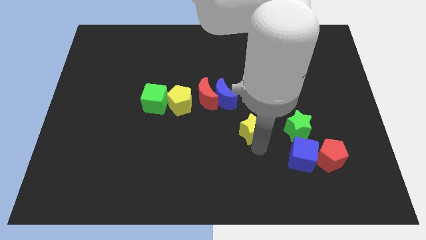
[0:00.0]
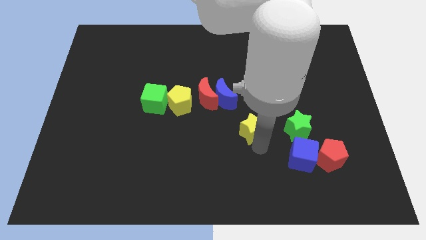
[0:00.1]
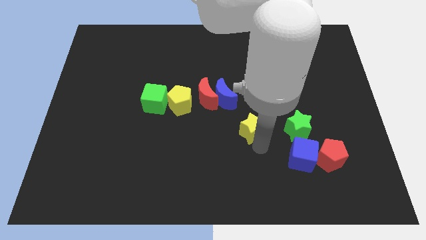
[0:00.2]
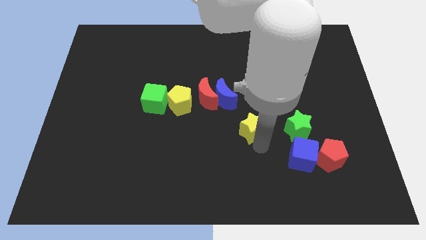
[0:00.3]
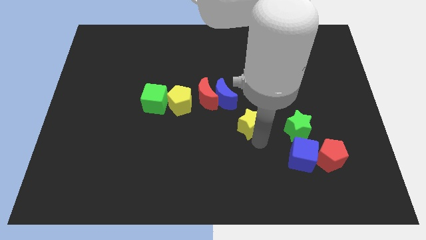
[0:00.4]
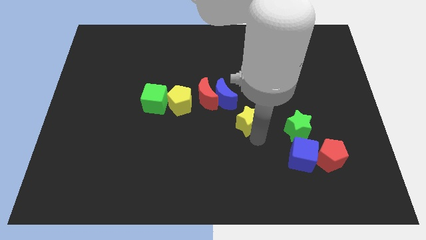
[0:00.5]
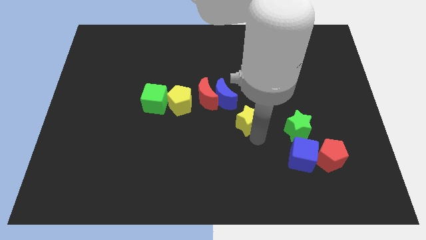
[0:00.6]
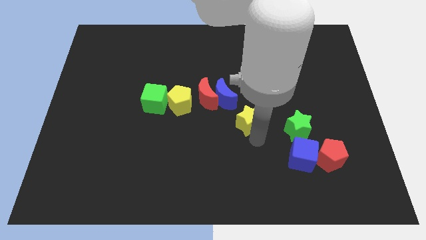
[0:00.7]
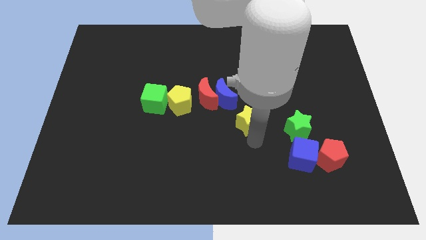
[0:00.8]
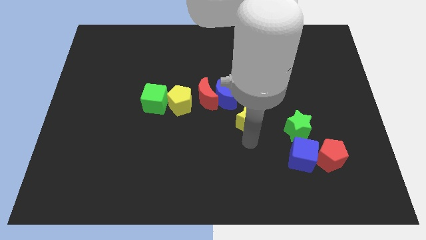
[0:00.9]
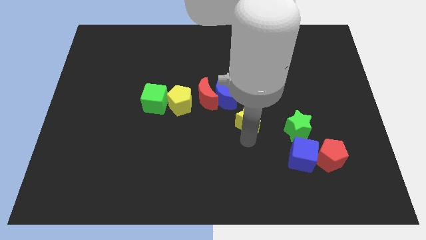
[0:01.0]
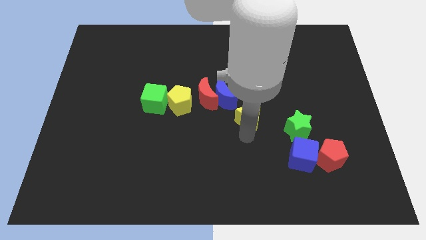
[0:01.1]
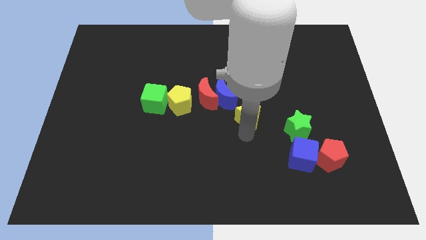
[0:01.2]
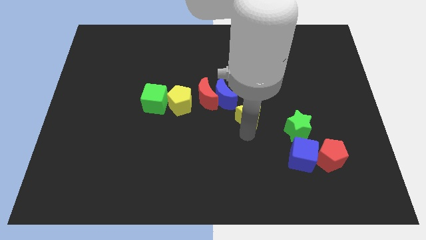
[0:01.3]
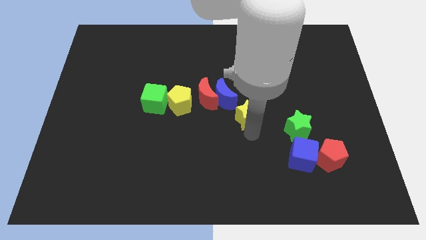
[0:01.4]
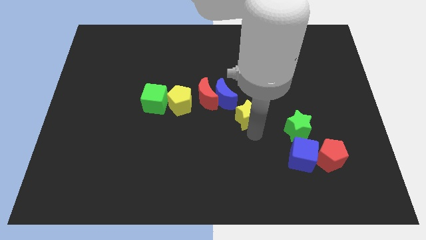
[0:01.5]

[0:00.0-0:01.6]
push yellow star towards the bottom of the blue crescent

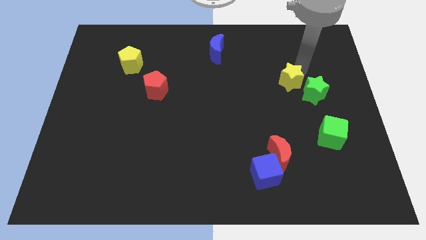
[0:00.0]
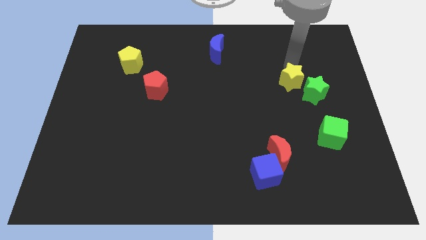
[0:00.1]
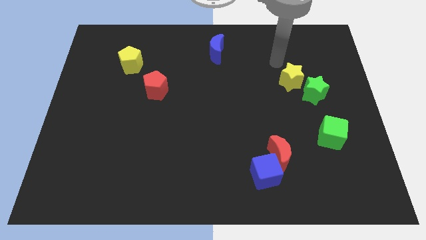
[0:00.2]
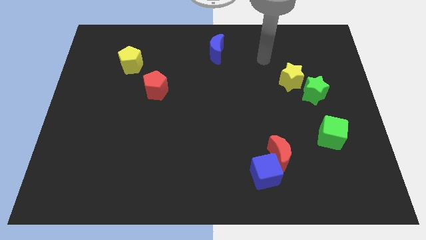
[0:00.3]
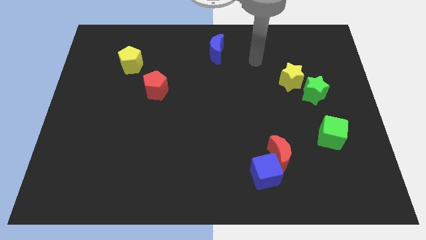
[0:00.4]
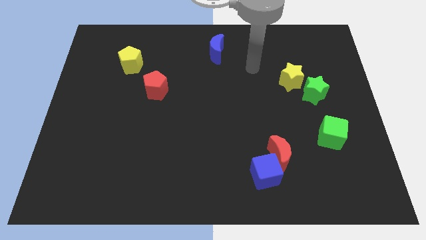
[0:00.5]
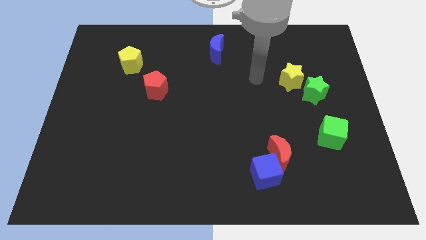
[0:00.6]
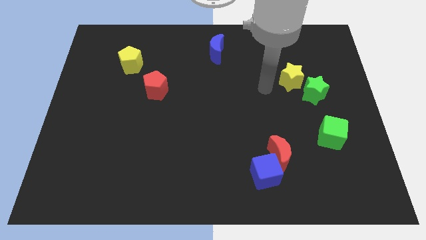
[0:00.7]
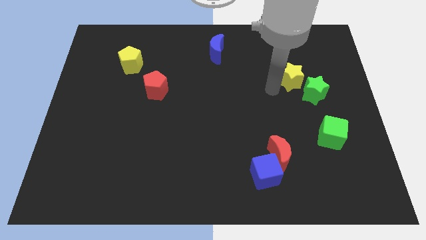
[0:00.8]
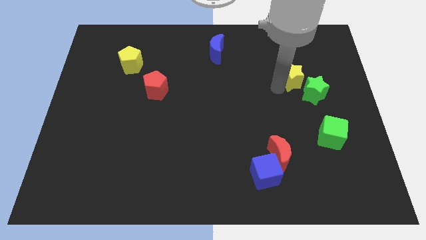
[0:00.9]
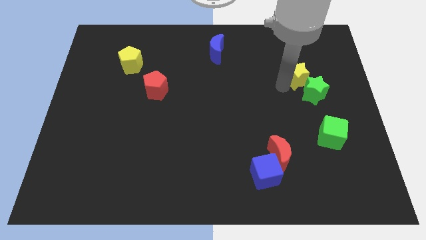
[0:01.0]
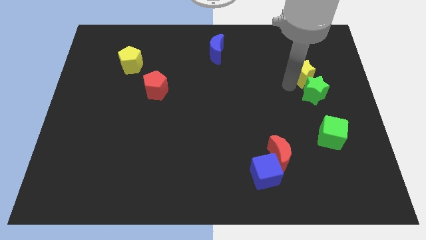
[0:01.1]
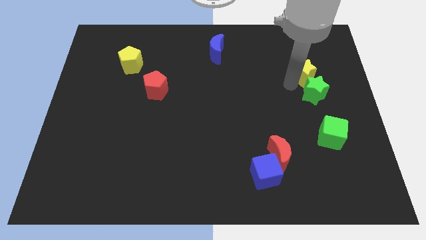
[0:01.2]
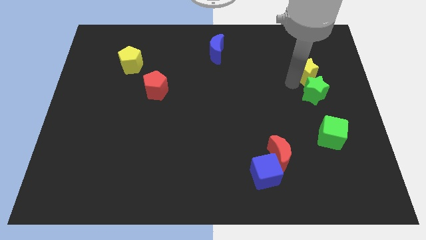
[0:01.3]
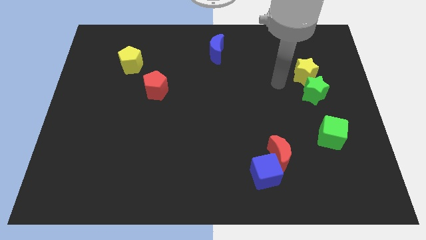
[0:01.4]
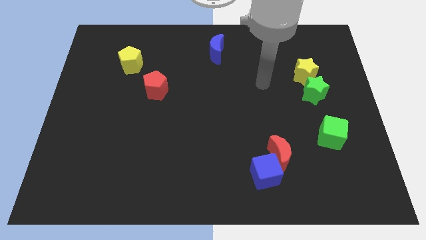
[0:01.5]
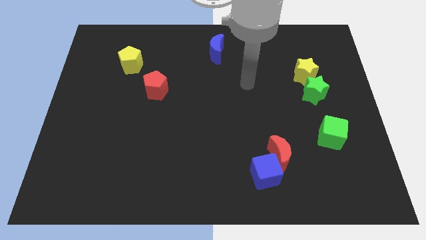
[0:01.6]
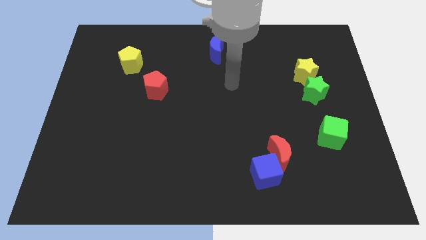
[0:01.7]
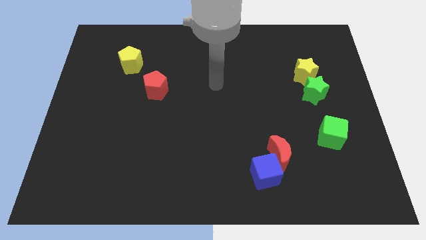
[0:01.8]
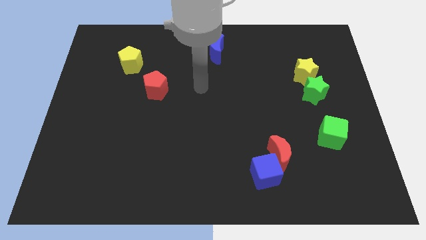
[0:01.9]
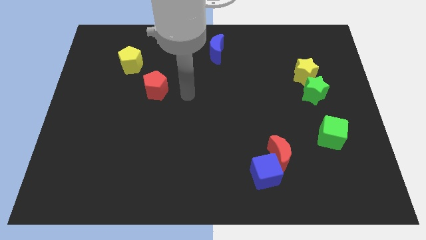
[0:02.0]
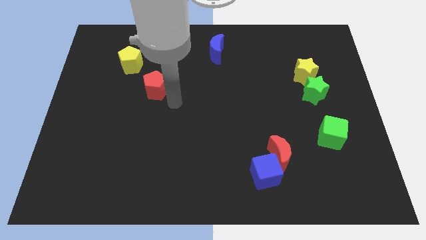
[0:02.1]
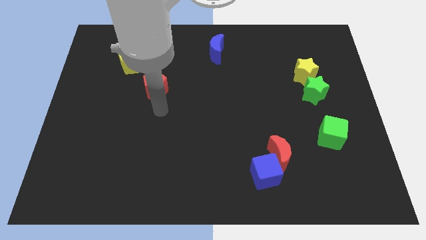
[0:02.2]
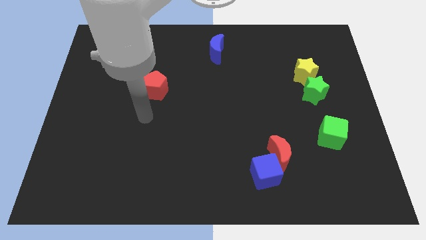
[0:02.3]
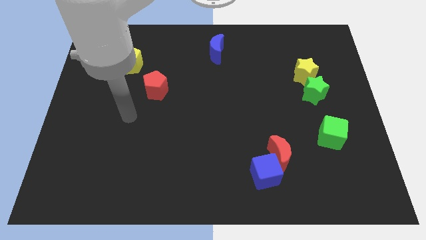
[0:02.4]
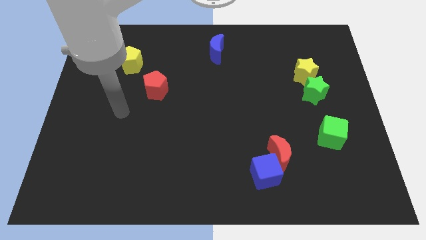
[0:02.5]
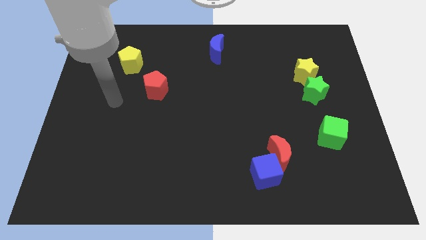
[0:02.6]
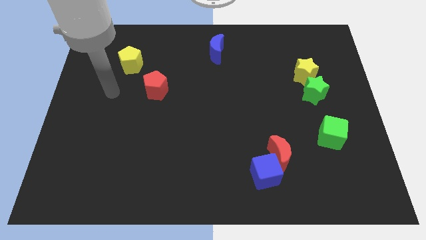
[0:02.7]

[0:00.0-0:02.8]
place the yellow star above the green star

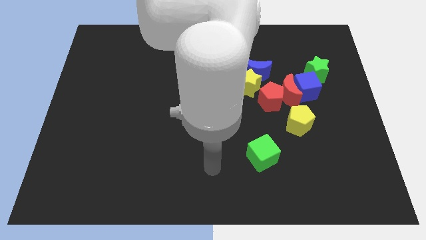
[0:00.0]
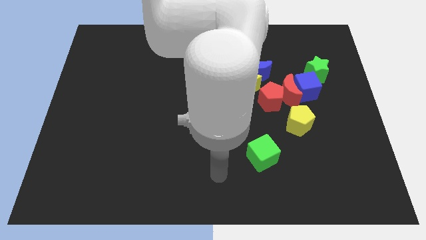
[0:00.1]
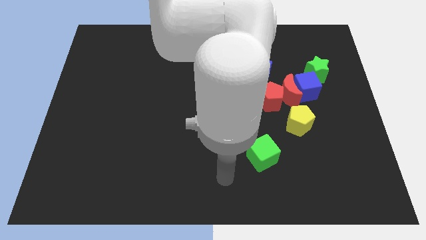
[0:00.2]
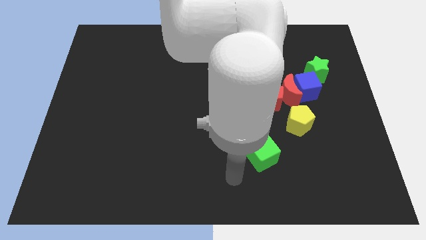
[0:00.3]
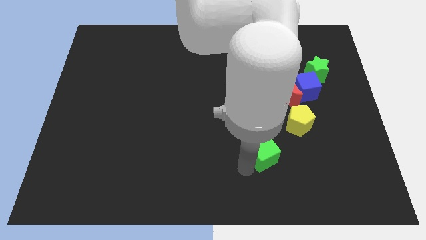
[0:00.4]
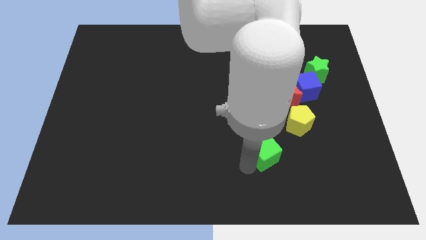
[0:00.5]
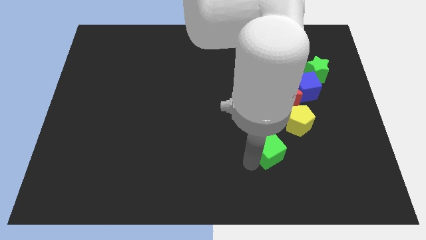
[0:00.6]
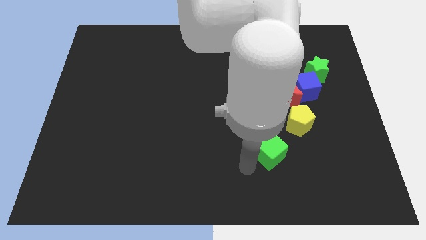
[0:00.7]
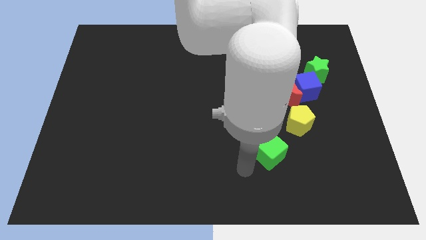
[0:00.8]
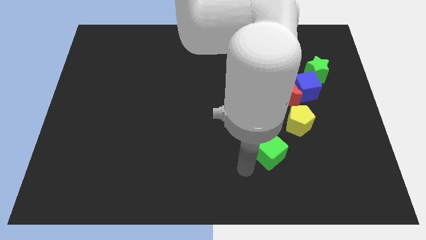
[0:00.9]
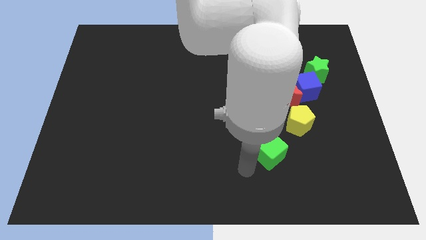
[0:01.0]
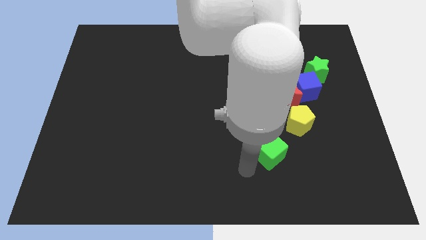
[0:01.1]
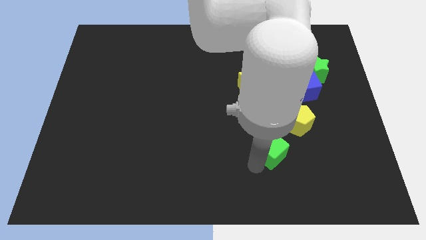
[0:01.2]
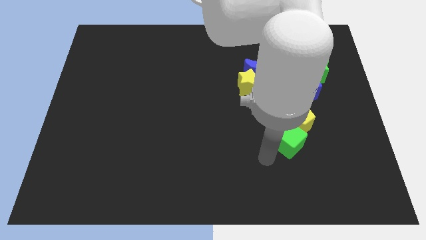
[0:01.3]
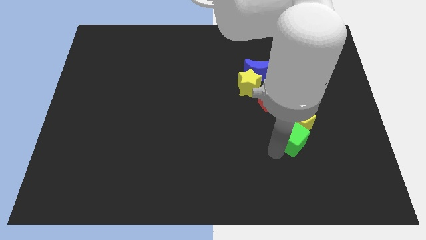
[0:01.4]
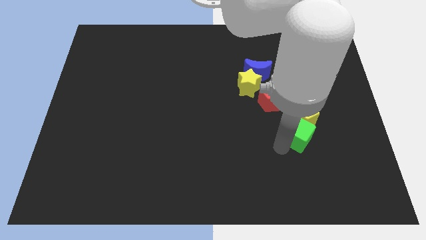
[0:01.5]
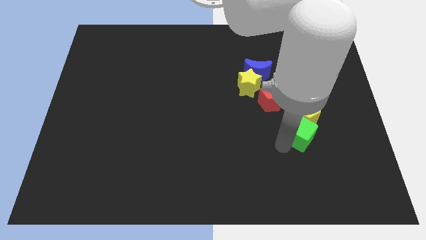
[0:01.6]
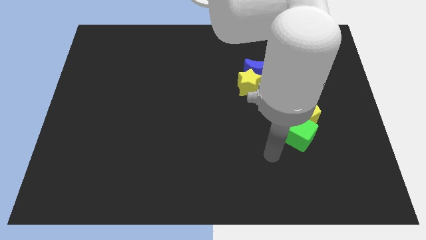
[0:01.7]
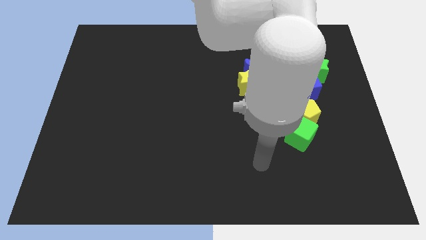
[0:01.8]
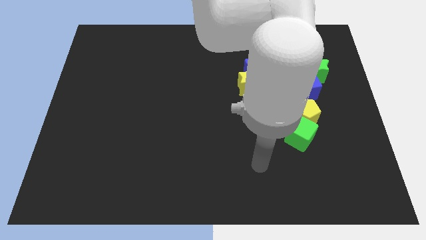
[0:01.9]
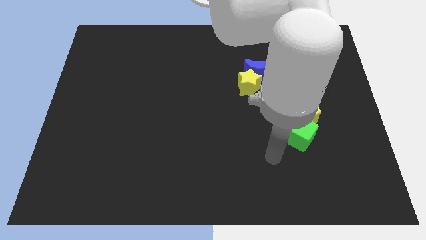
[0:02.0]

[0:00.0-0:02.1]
push green cube into yellow pentagon

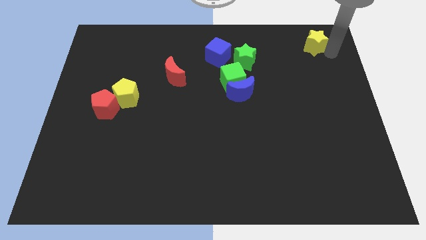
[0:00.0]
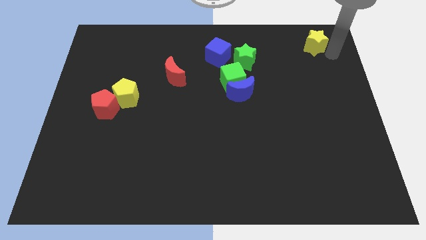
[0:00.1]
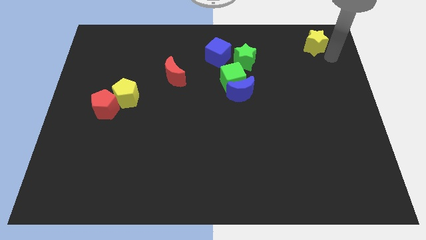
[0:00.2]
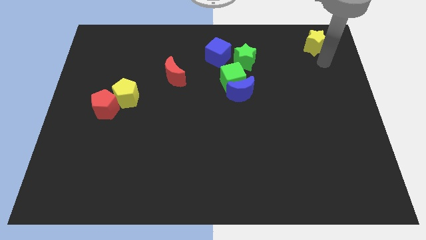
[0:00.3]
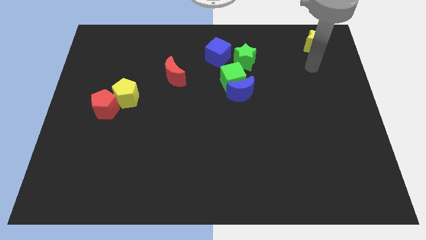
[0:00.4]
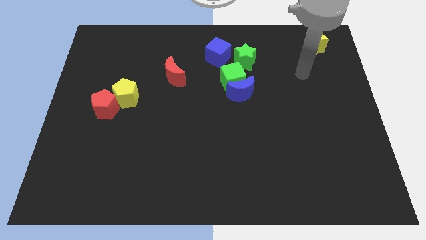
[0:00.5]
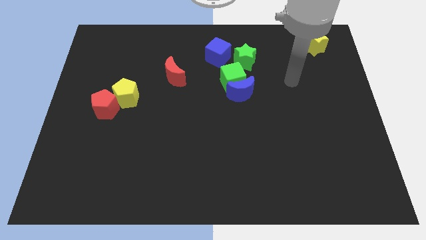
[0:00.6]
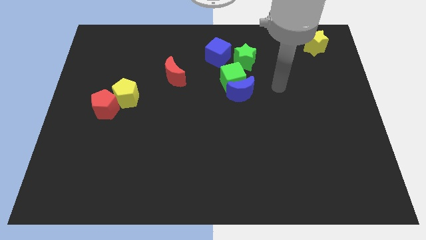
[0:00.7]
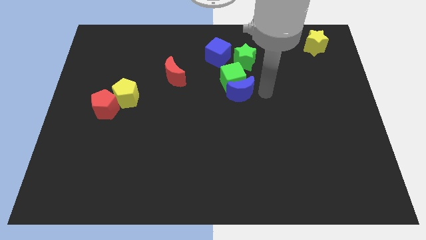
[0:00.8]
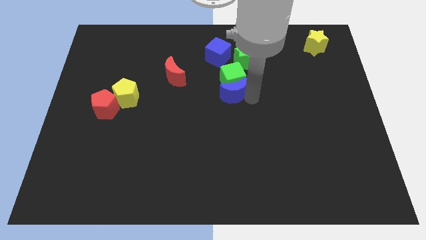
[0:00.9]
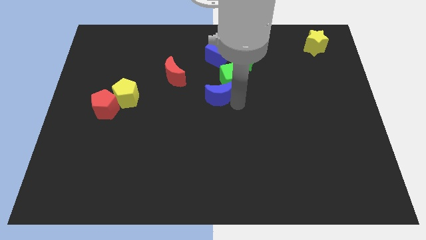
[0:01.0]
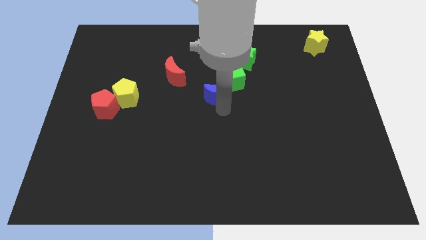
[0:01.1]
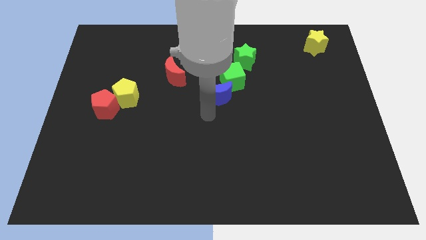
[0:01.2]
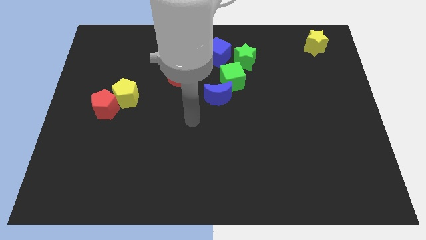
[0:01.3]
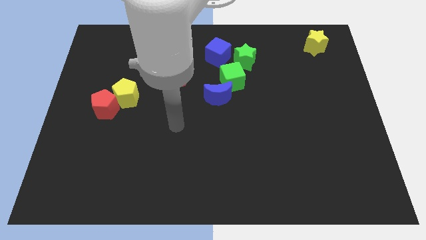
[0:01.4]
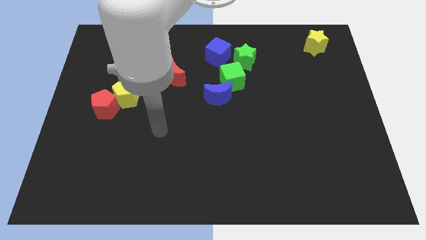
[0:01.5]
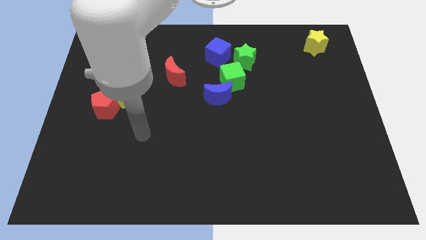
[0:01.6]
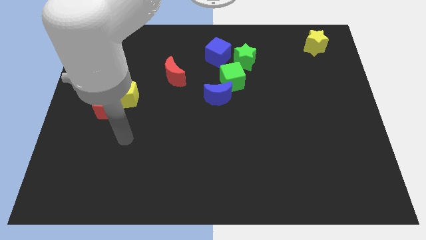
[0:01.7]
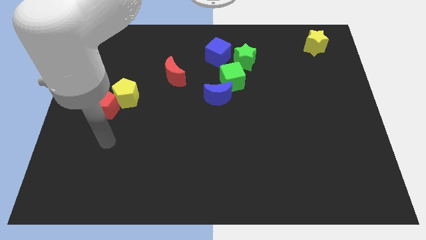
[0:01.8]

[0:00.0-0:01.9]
move the blue crescent to slightly left of green cube

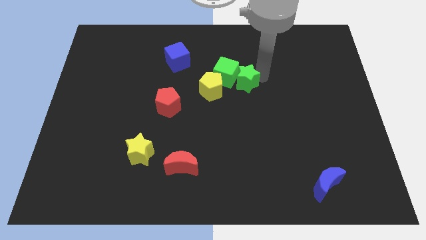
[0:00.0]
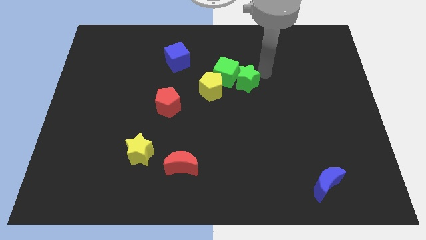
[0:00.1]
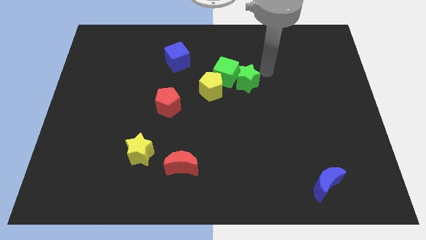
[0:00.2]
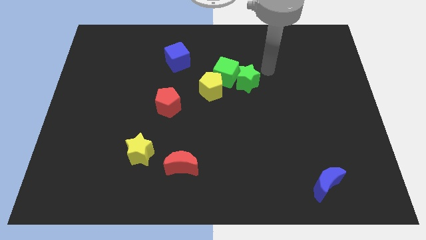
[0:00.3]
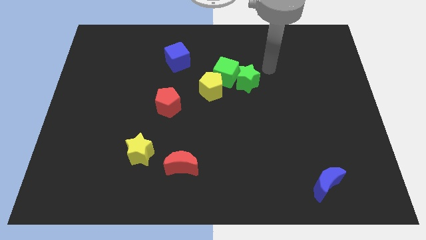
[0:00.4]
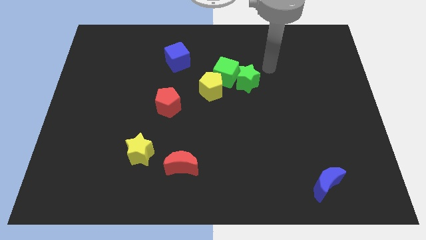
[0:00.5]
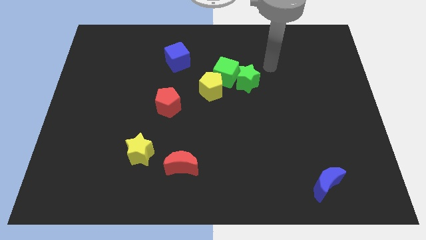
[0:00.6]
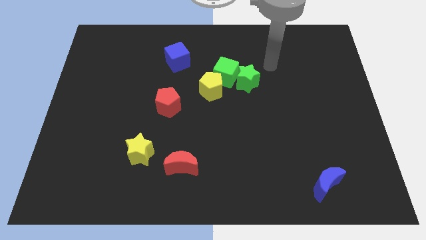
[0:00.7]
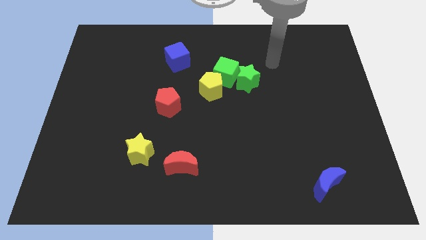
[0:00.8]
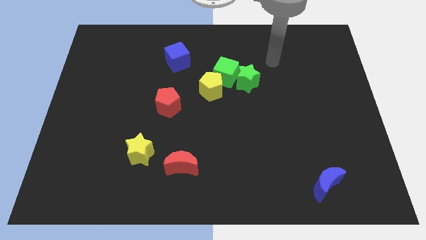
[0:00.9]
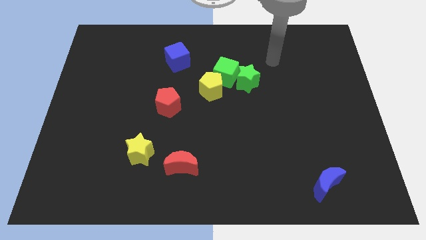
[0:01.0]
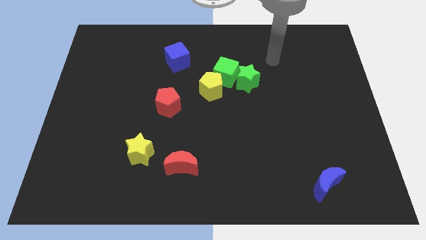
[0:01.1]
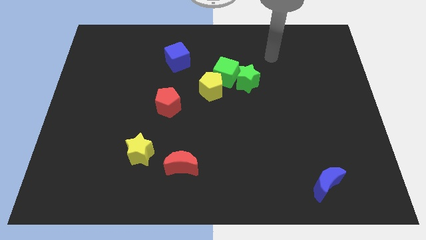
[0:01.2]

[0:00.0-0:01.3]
move your hand away from the green star
